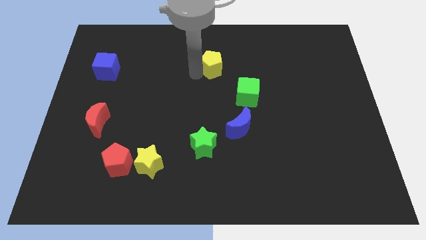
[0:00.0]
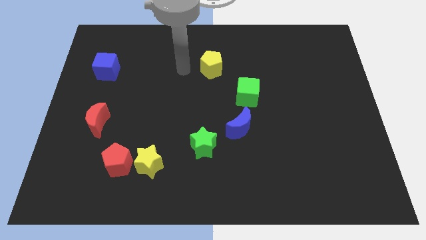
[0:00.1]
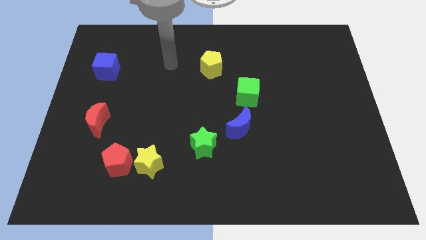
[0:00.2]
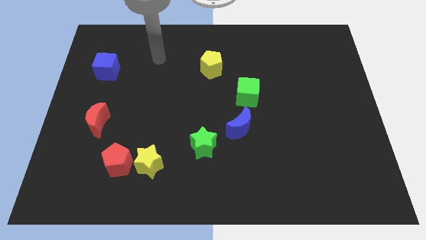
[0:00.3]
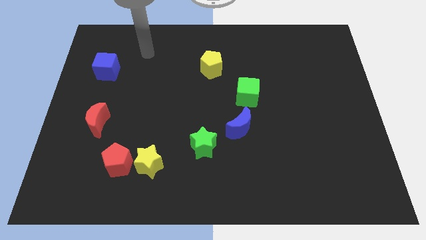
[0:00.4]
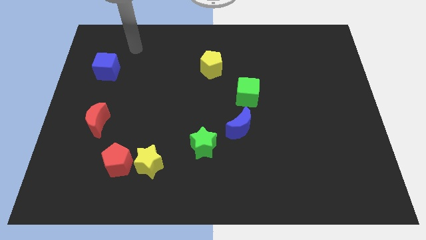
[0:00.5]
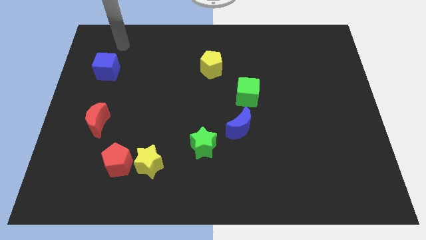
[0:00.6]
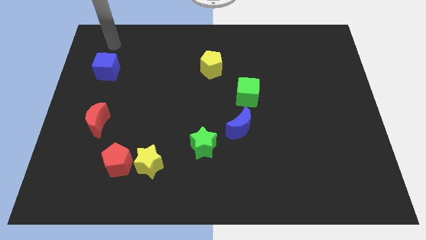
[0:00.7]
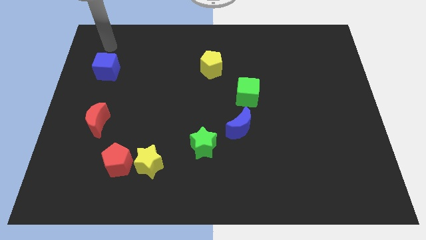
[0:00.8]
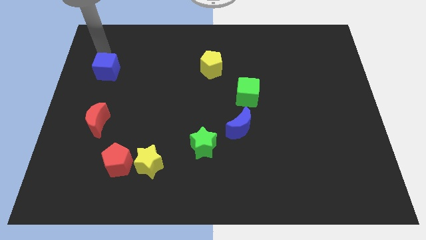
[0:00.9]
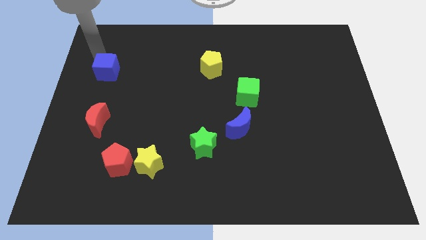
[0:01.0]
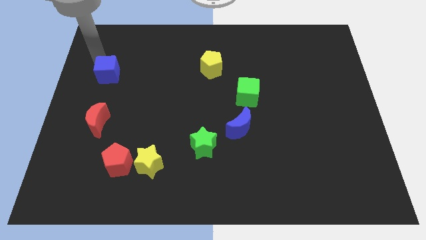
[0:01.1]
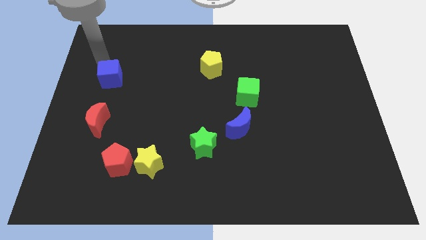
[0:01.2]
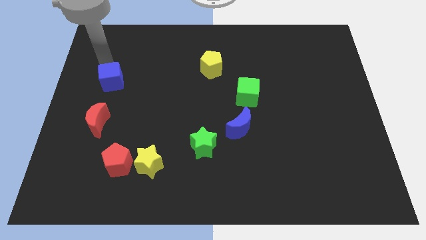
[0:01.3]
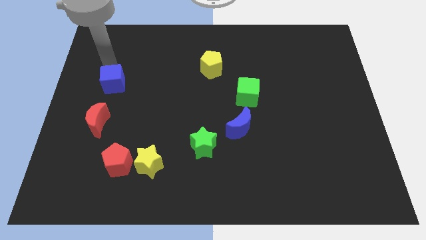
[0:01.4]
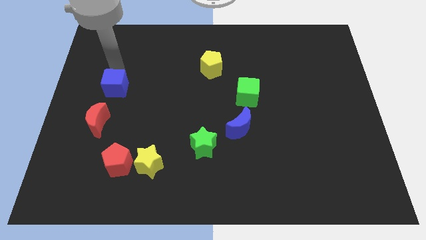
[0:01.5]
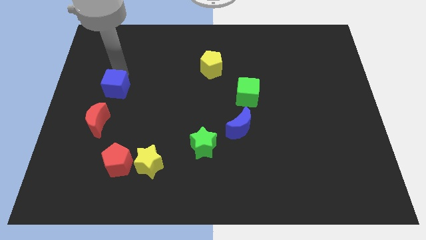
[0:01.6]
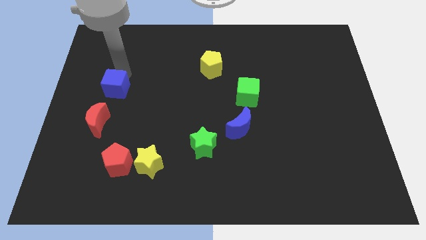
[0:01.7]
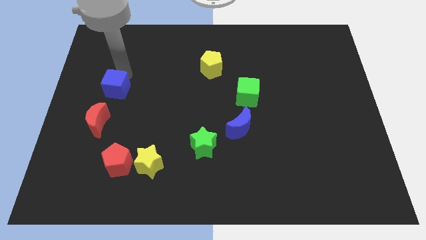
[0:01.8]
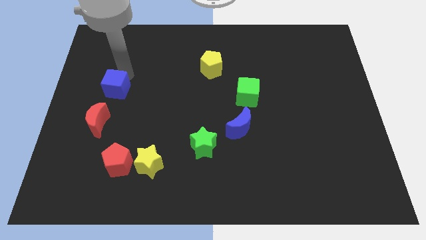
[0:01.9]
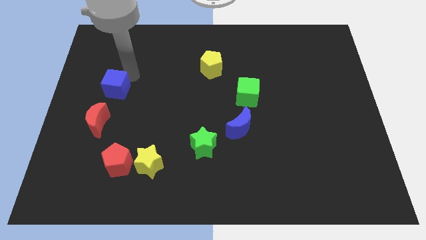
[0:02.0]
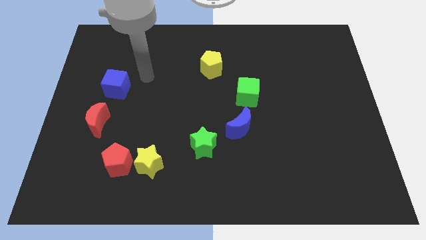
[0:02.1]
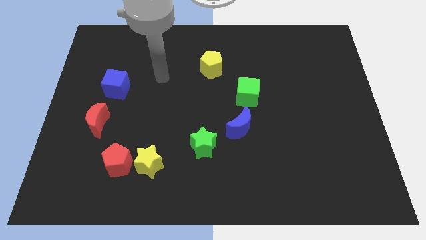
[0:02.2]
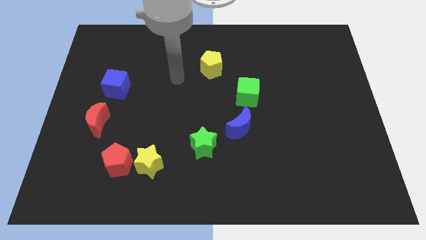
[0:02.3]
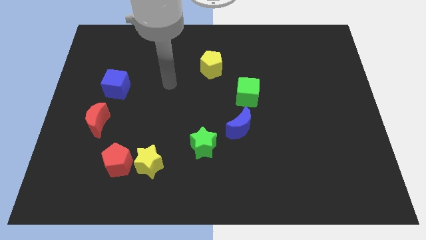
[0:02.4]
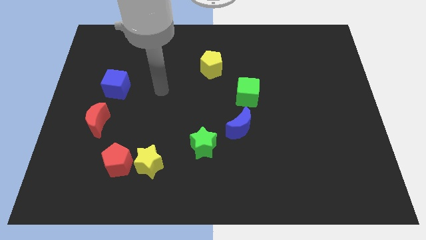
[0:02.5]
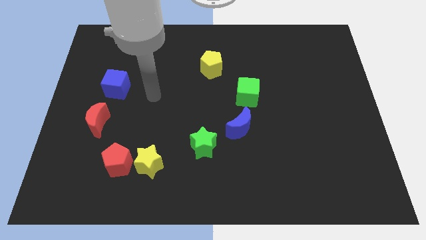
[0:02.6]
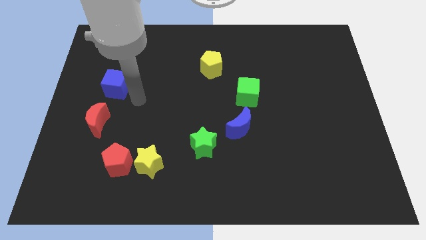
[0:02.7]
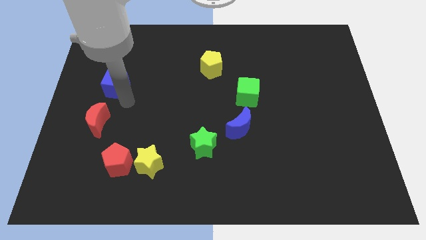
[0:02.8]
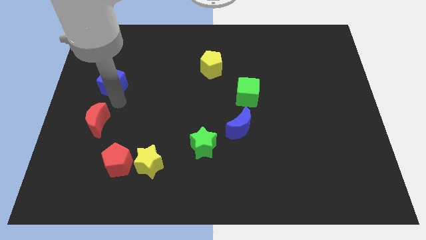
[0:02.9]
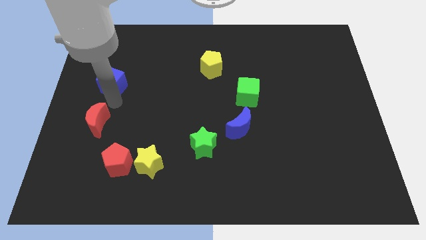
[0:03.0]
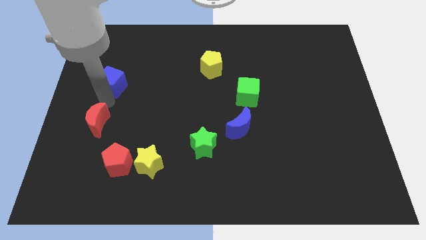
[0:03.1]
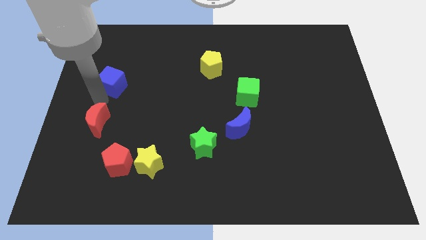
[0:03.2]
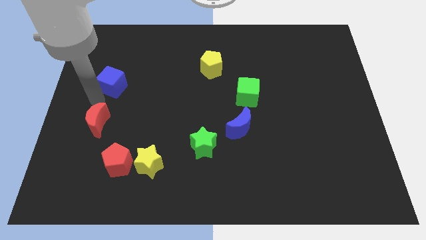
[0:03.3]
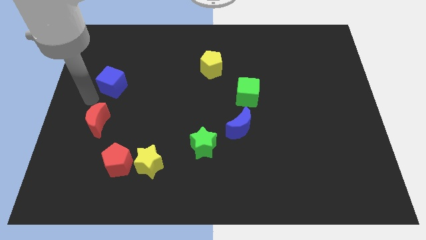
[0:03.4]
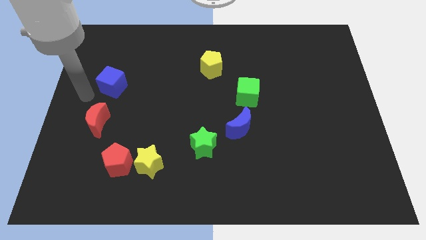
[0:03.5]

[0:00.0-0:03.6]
slightly touch down the blue cube

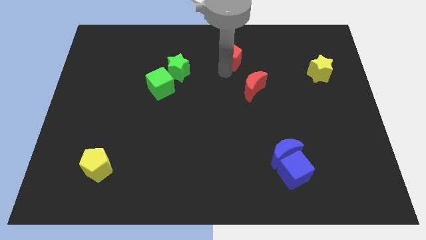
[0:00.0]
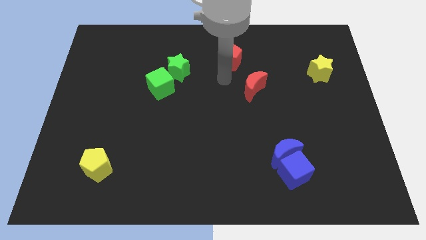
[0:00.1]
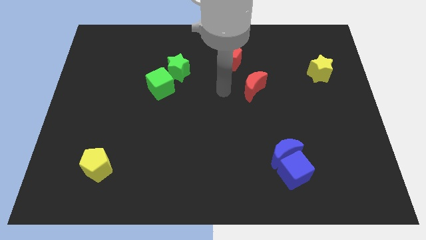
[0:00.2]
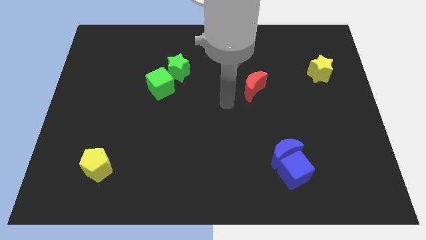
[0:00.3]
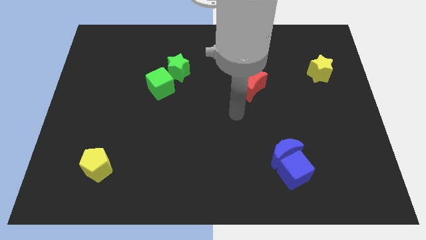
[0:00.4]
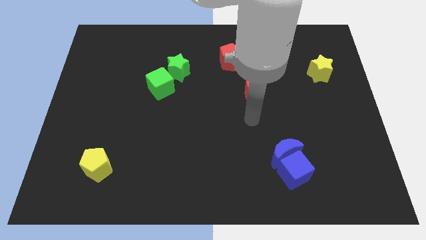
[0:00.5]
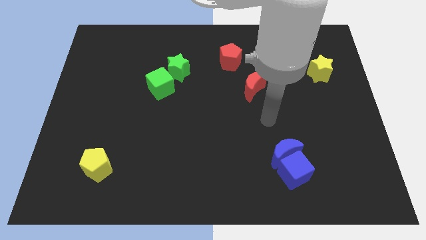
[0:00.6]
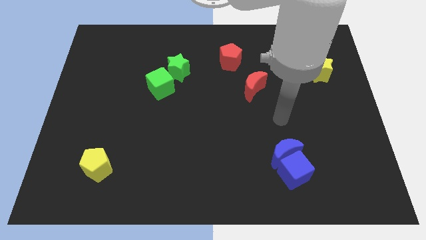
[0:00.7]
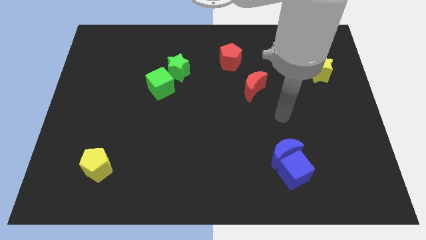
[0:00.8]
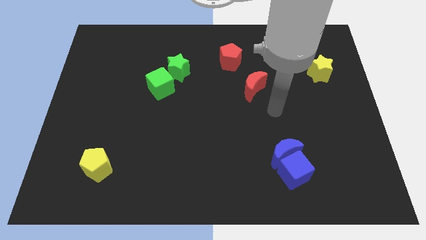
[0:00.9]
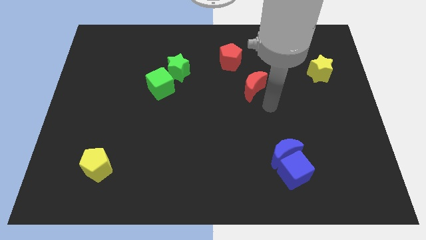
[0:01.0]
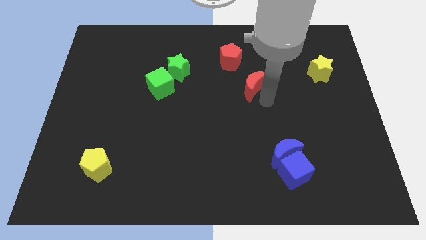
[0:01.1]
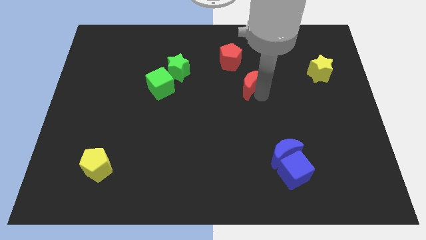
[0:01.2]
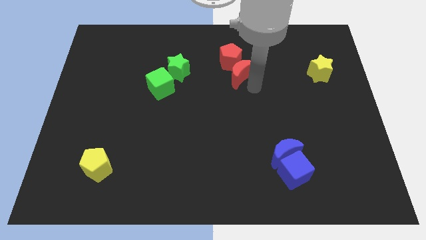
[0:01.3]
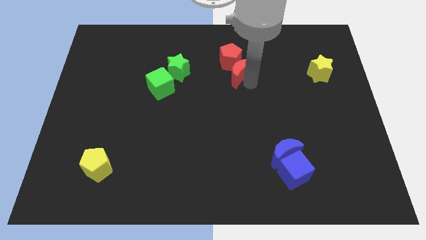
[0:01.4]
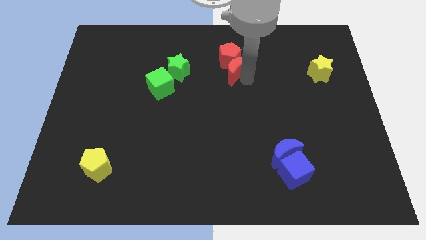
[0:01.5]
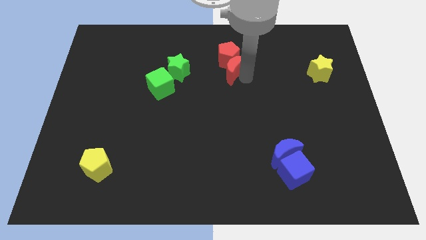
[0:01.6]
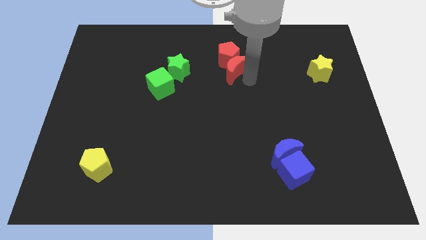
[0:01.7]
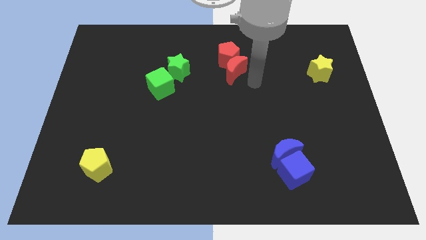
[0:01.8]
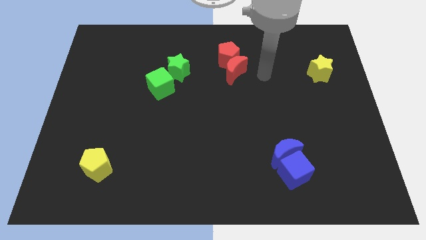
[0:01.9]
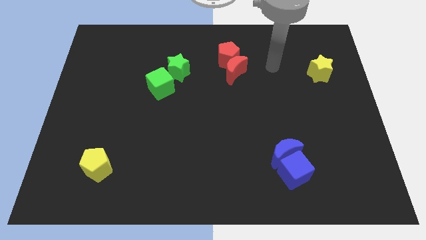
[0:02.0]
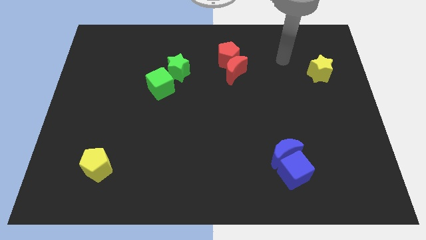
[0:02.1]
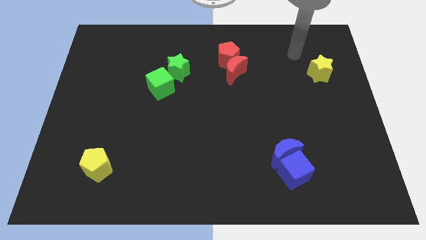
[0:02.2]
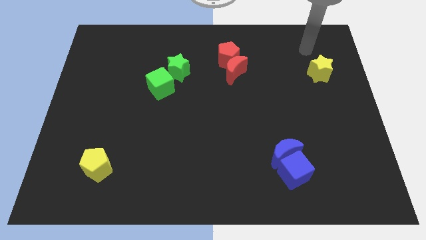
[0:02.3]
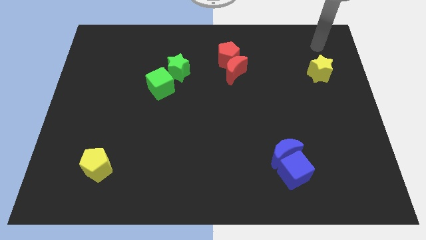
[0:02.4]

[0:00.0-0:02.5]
move red moon into red pentagon

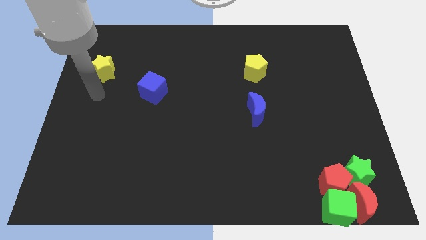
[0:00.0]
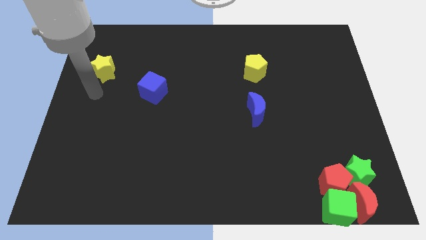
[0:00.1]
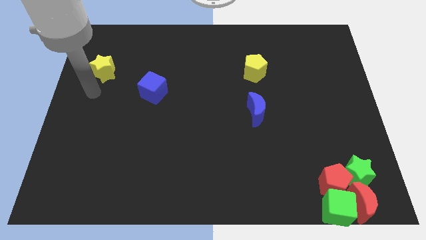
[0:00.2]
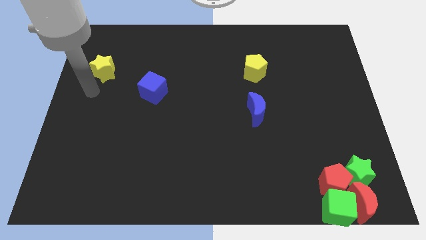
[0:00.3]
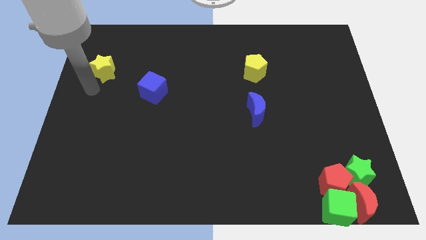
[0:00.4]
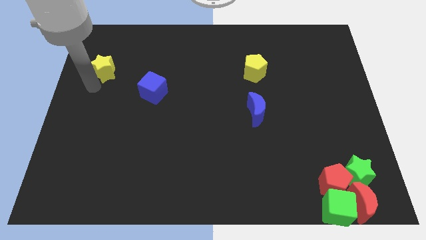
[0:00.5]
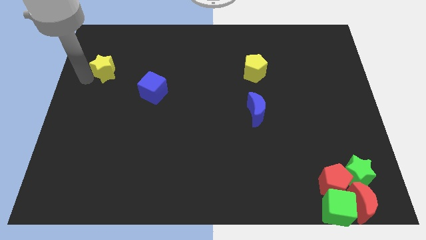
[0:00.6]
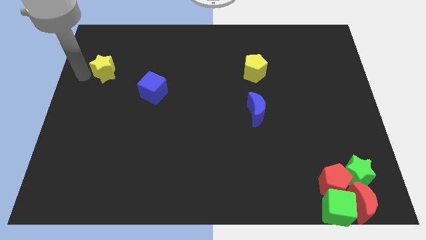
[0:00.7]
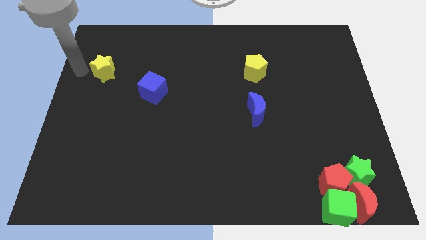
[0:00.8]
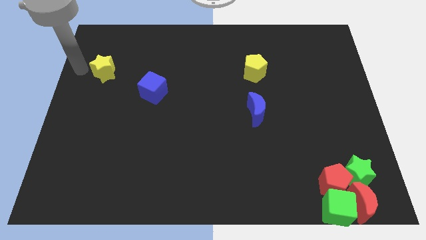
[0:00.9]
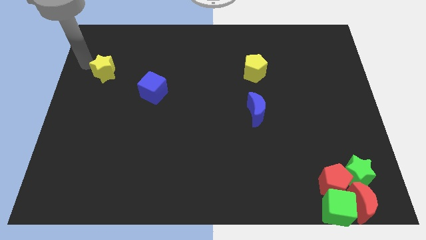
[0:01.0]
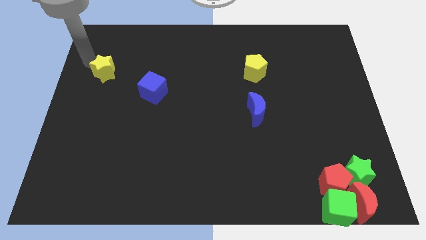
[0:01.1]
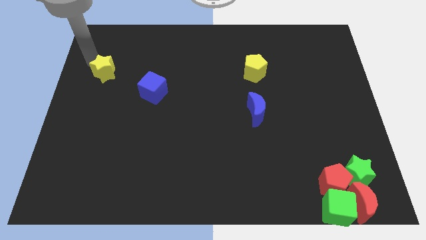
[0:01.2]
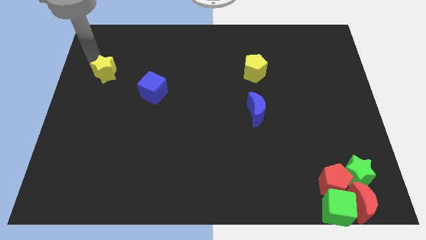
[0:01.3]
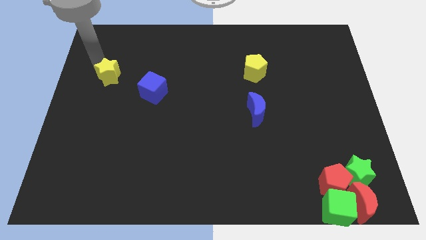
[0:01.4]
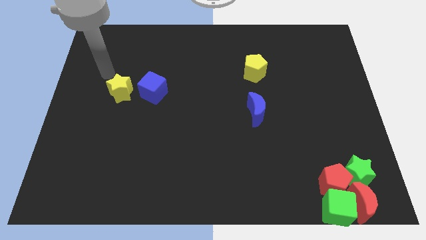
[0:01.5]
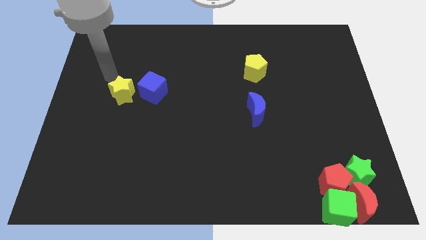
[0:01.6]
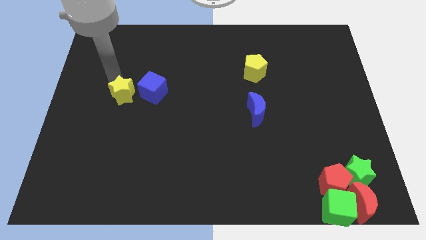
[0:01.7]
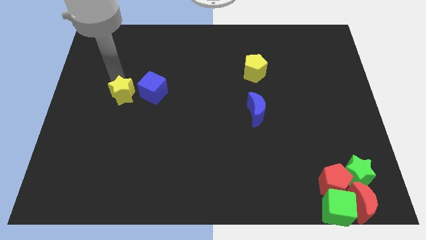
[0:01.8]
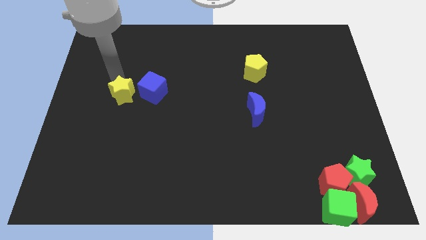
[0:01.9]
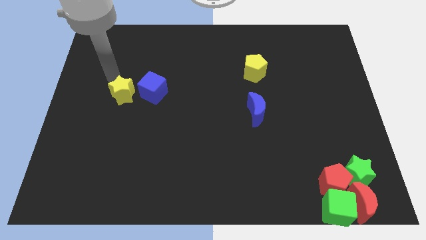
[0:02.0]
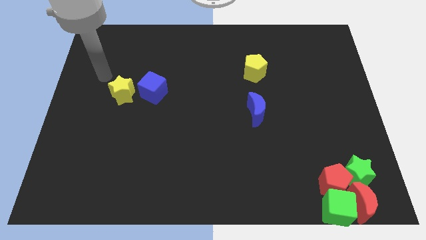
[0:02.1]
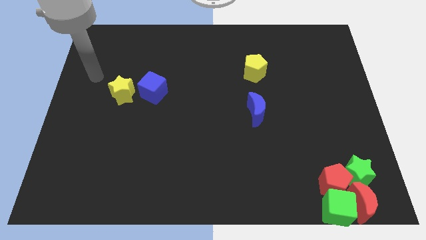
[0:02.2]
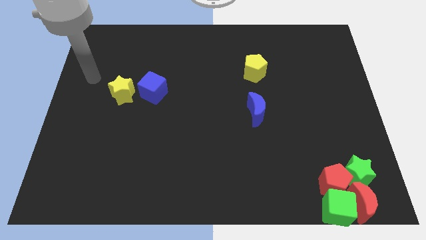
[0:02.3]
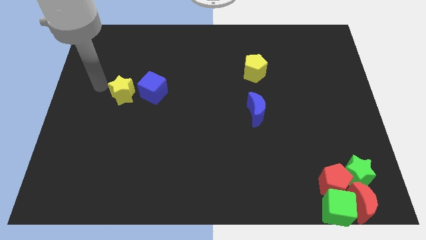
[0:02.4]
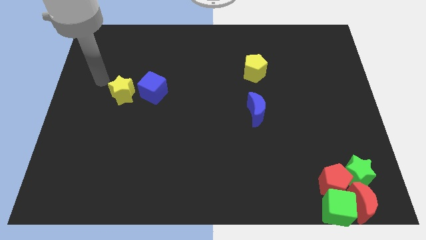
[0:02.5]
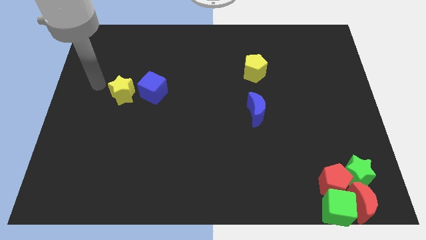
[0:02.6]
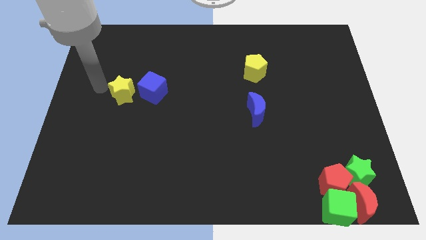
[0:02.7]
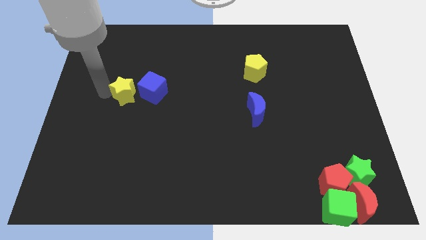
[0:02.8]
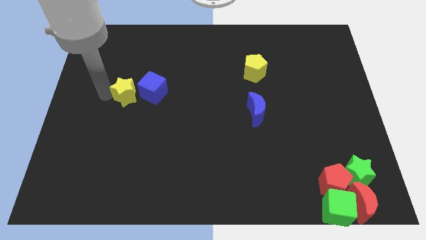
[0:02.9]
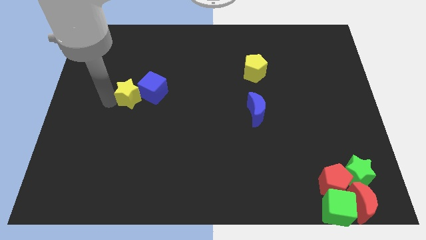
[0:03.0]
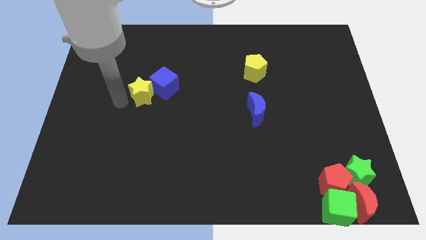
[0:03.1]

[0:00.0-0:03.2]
move the yellow star close to the blue cube
